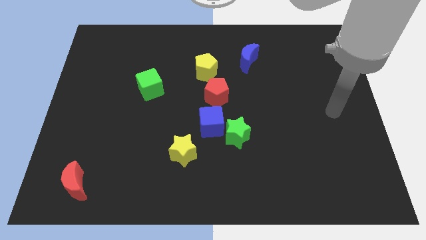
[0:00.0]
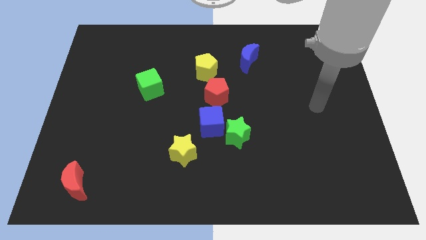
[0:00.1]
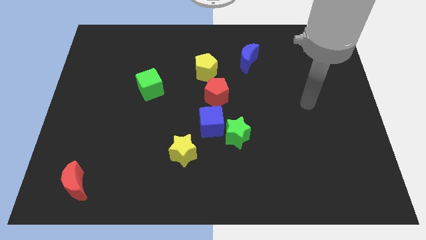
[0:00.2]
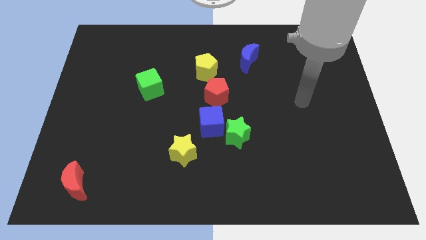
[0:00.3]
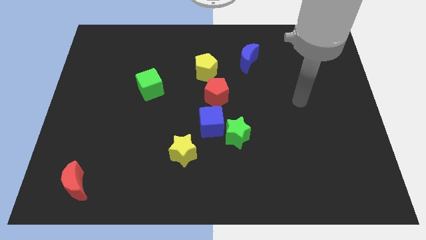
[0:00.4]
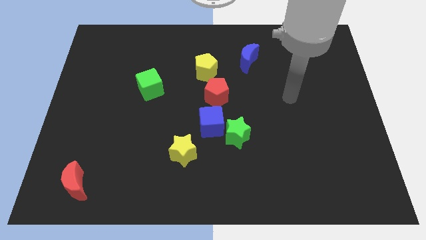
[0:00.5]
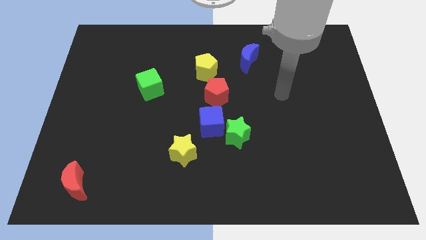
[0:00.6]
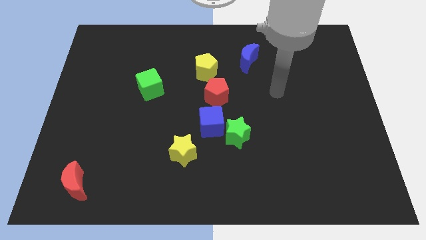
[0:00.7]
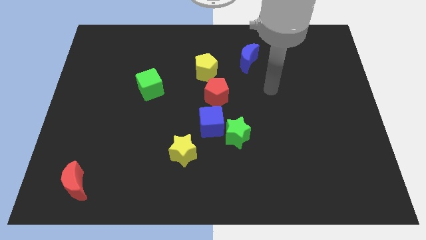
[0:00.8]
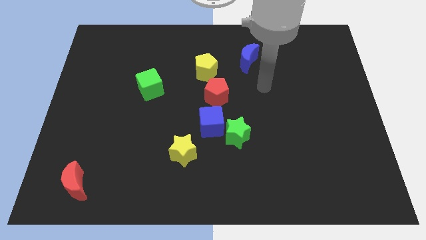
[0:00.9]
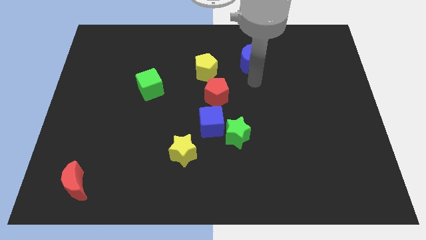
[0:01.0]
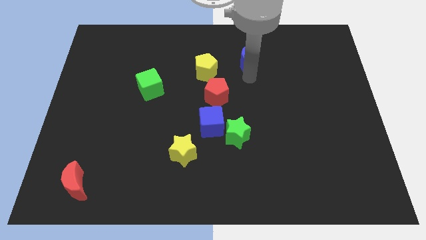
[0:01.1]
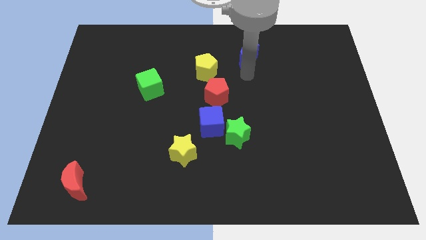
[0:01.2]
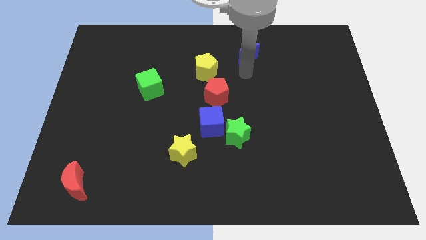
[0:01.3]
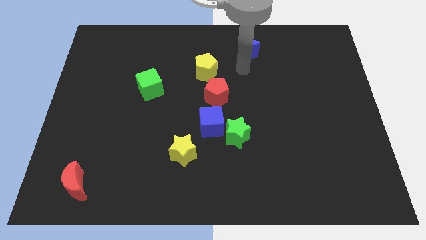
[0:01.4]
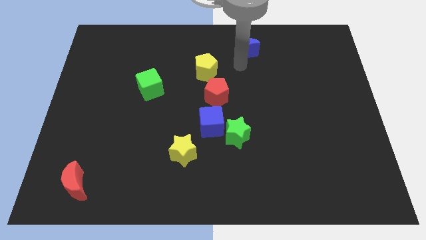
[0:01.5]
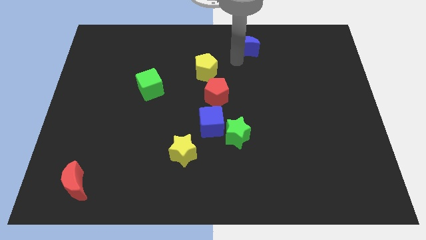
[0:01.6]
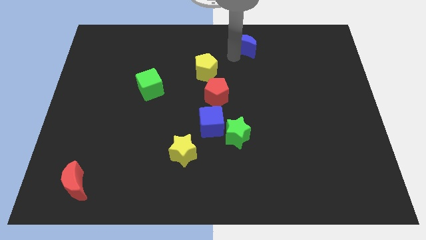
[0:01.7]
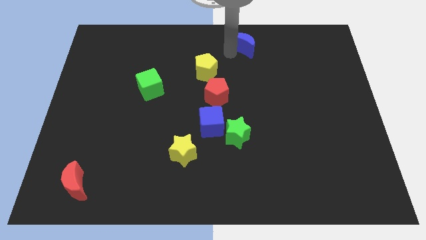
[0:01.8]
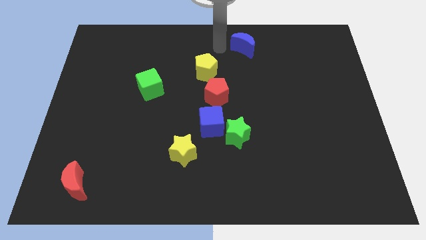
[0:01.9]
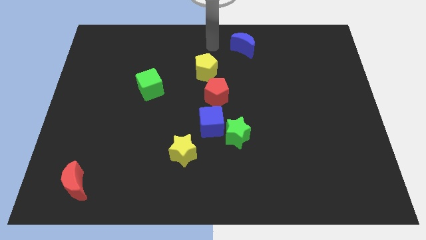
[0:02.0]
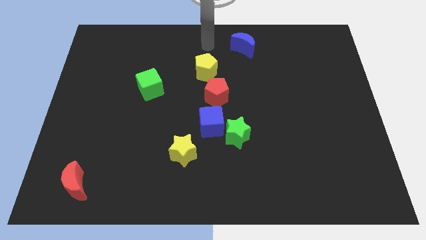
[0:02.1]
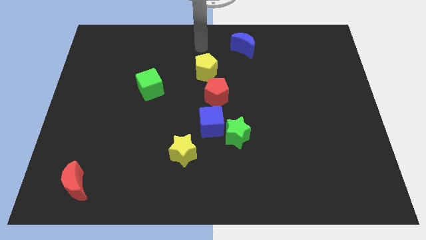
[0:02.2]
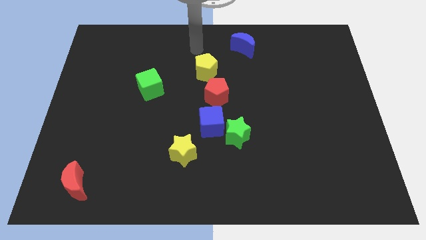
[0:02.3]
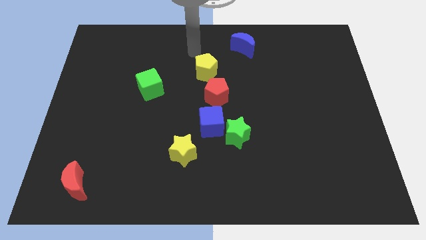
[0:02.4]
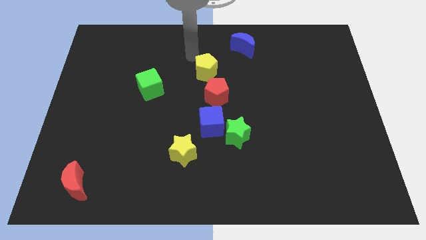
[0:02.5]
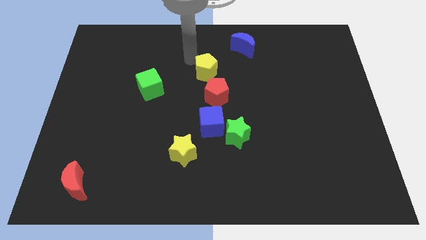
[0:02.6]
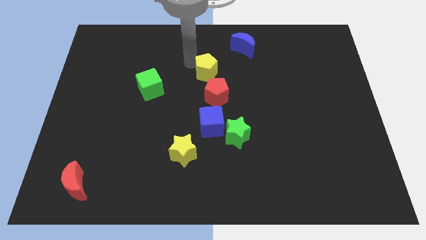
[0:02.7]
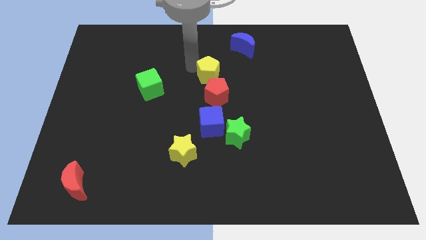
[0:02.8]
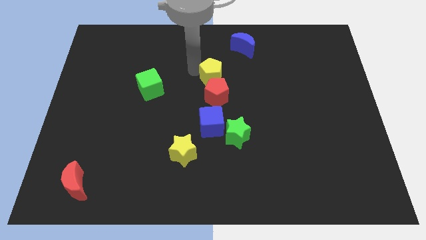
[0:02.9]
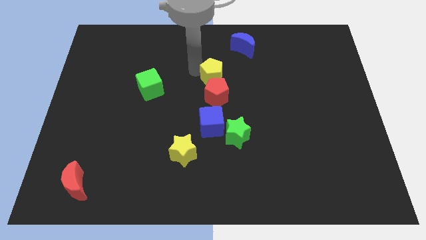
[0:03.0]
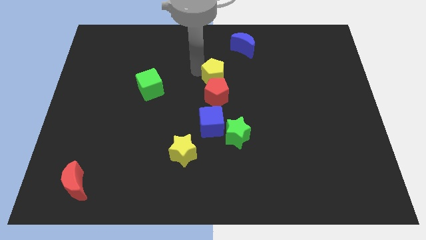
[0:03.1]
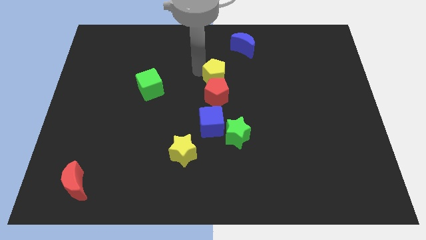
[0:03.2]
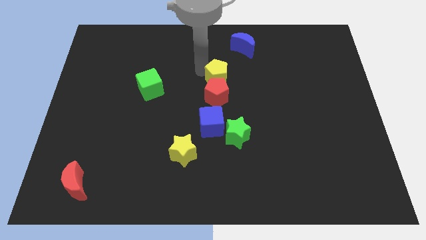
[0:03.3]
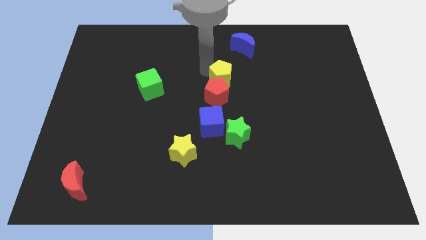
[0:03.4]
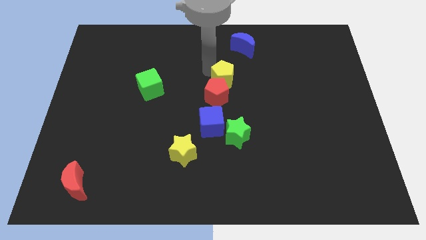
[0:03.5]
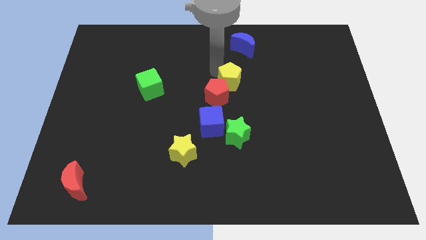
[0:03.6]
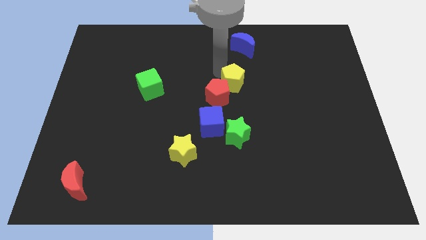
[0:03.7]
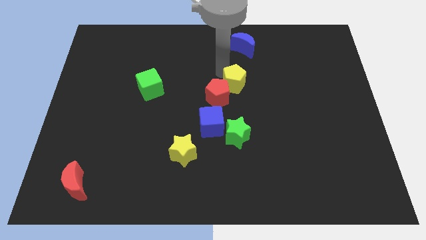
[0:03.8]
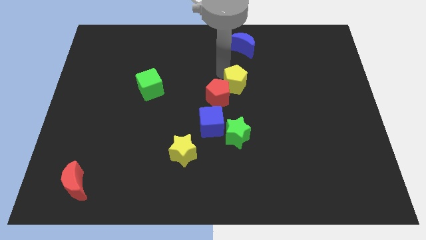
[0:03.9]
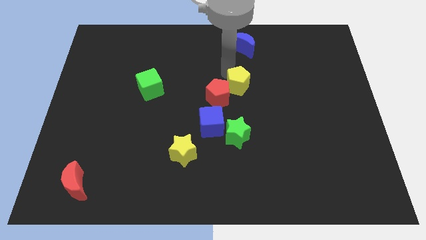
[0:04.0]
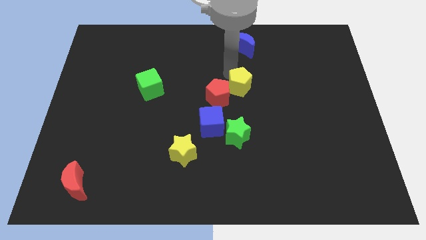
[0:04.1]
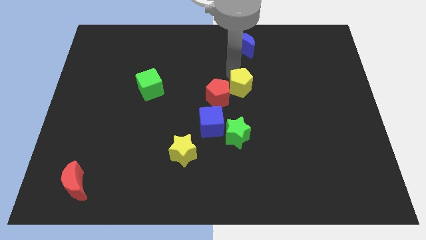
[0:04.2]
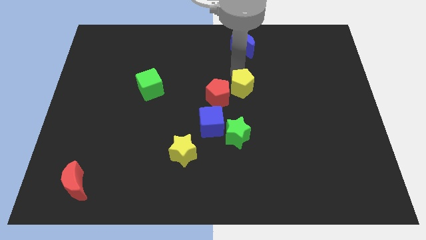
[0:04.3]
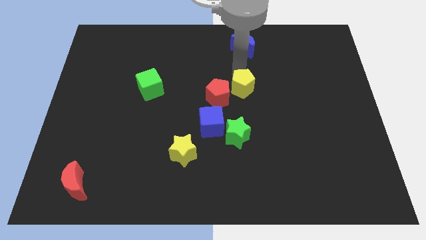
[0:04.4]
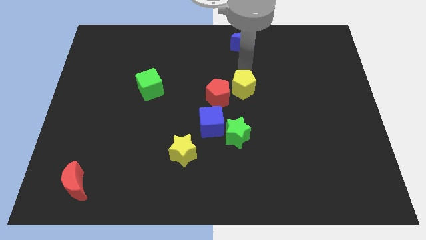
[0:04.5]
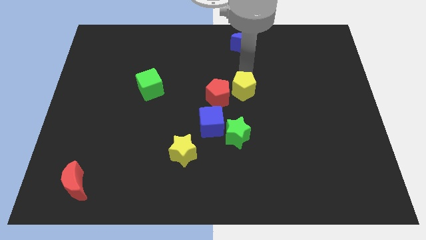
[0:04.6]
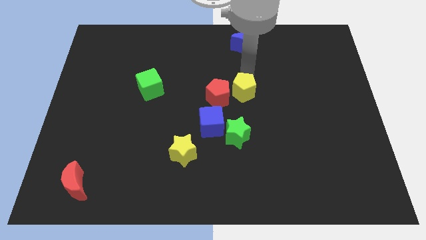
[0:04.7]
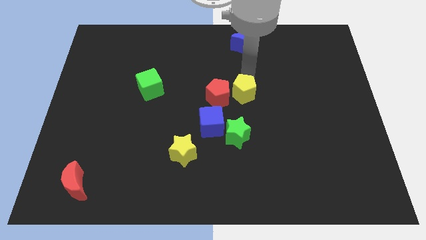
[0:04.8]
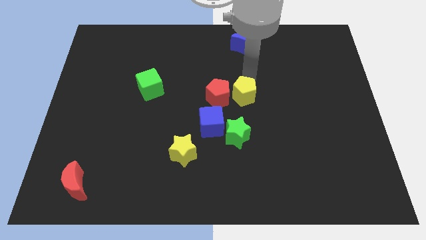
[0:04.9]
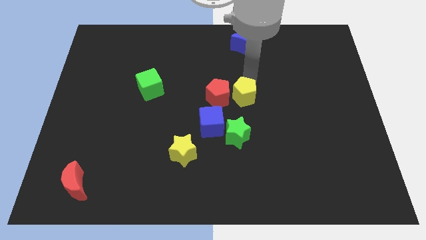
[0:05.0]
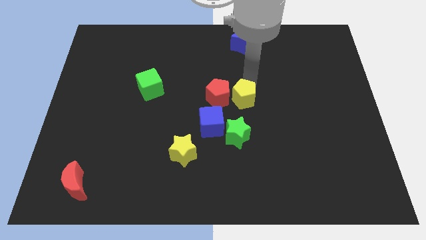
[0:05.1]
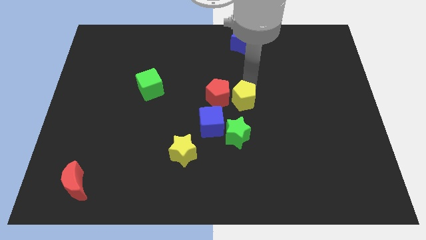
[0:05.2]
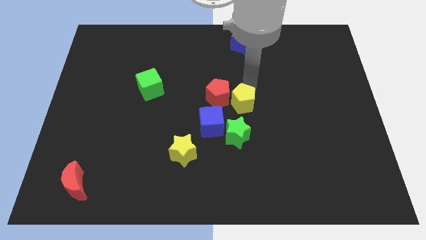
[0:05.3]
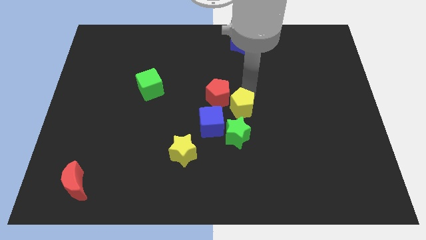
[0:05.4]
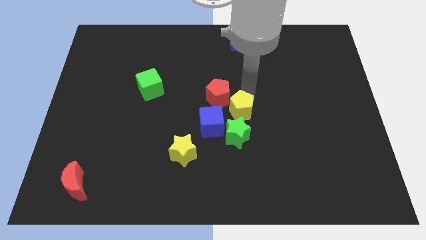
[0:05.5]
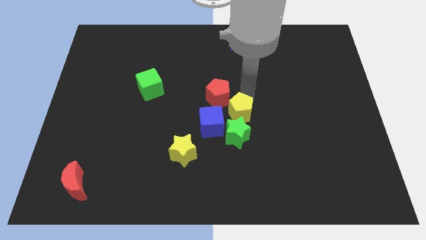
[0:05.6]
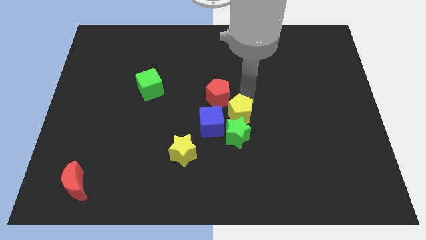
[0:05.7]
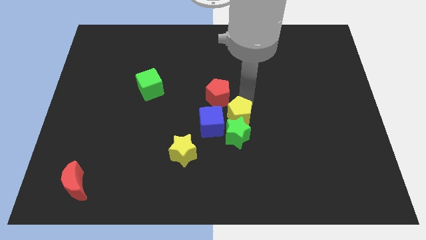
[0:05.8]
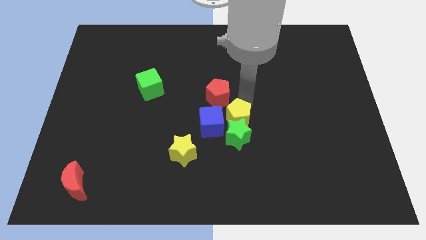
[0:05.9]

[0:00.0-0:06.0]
move the yellow pentagon towards the green star

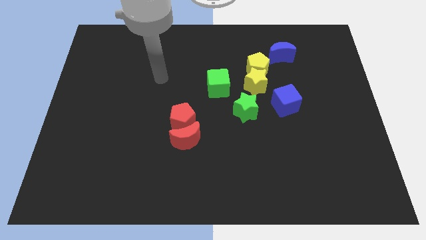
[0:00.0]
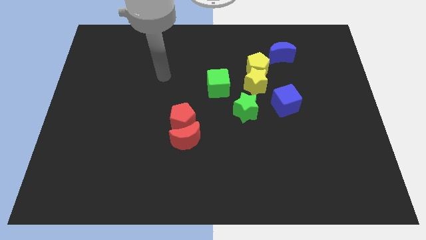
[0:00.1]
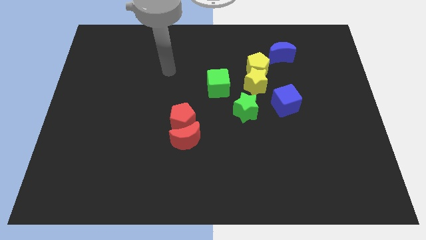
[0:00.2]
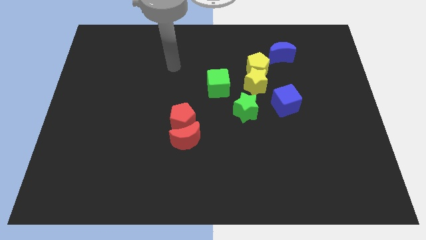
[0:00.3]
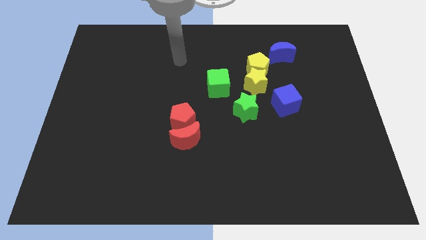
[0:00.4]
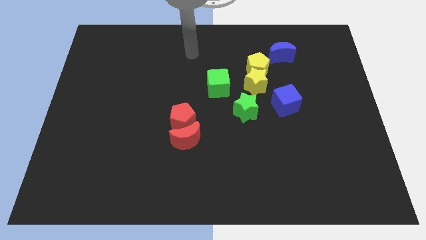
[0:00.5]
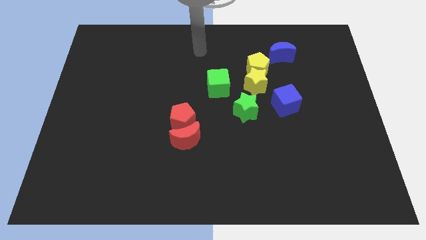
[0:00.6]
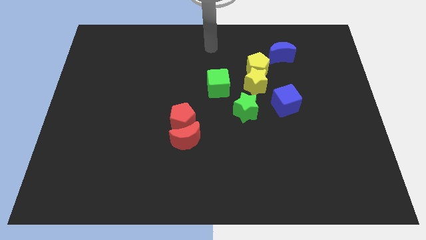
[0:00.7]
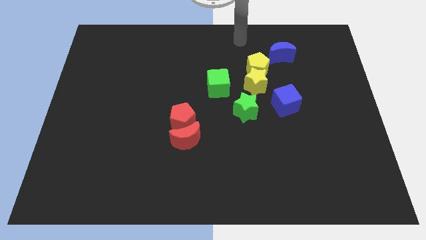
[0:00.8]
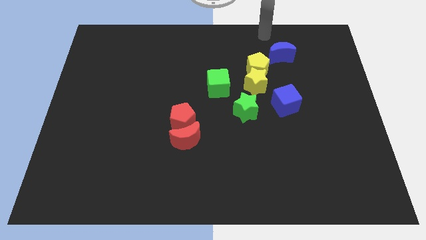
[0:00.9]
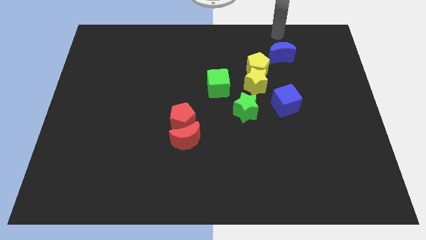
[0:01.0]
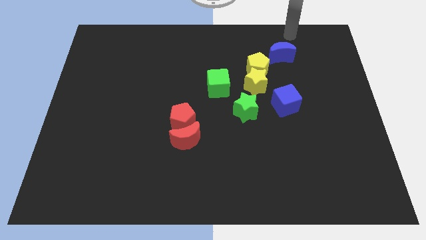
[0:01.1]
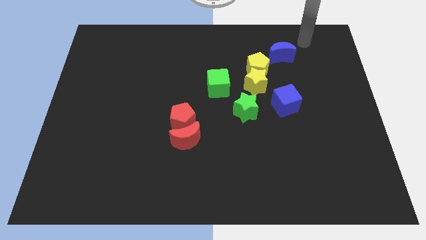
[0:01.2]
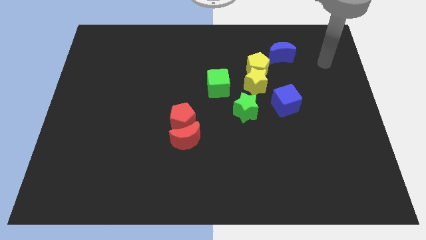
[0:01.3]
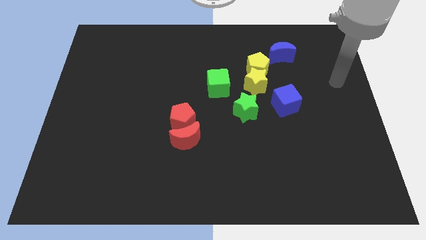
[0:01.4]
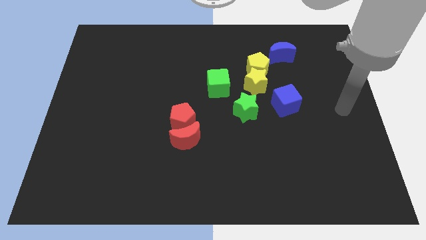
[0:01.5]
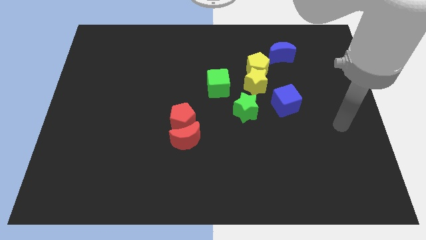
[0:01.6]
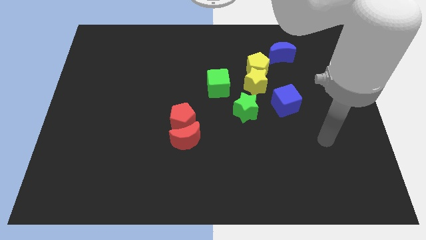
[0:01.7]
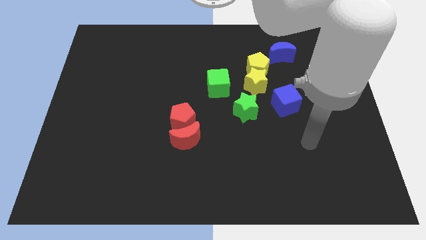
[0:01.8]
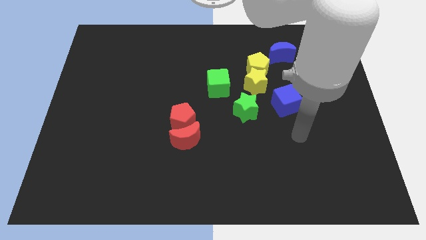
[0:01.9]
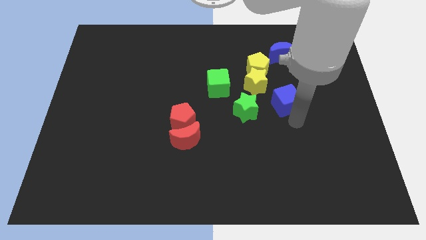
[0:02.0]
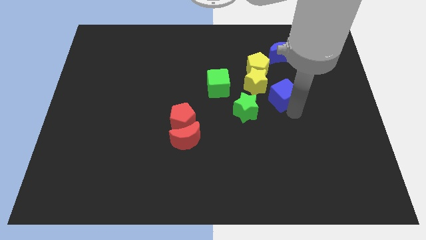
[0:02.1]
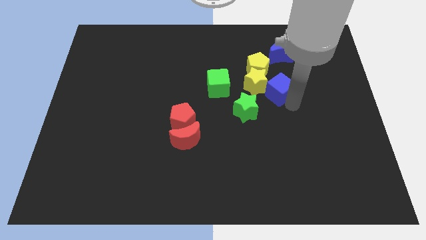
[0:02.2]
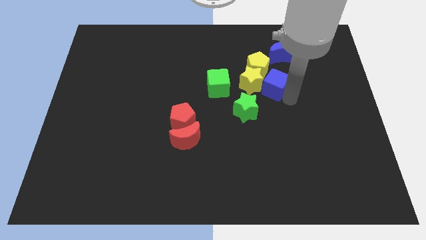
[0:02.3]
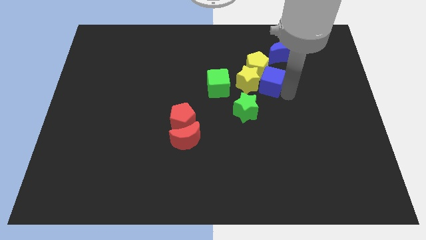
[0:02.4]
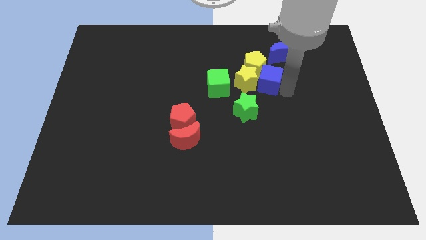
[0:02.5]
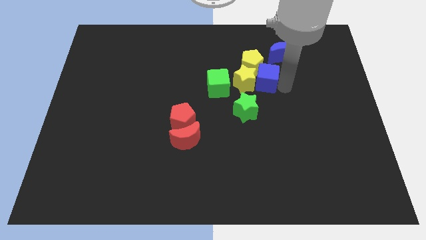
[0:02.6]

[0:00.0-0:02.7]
put the blue cube to the yellow pentagon
